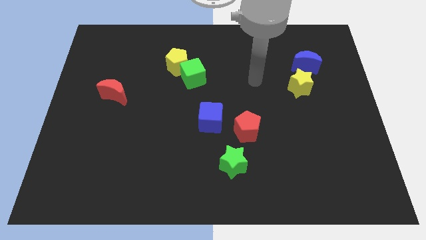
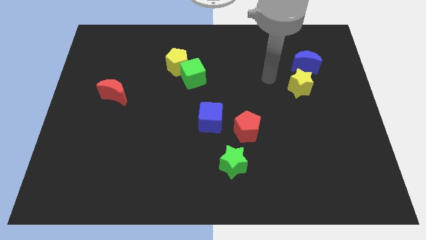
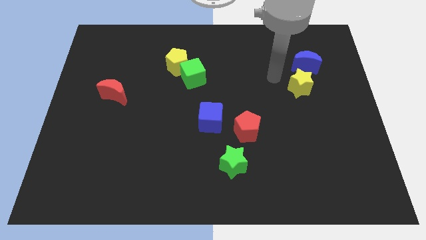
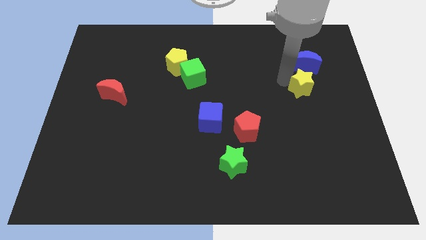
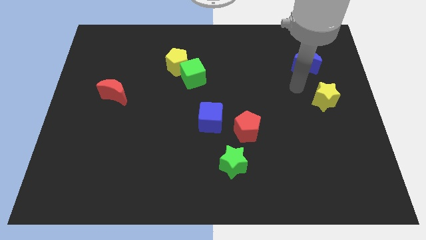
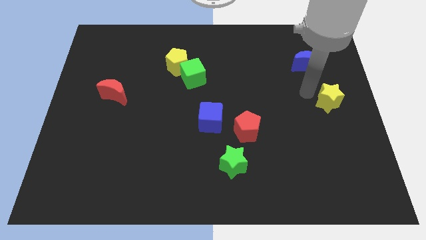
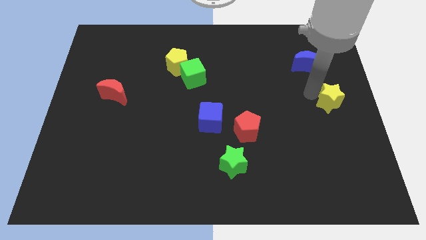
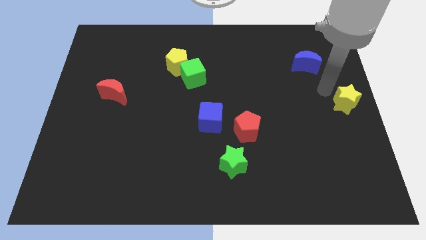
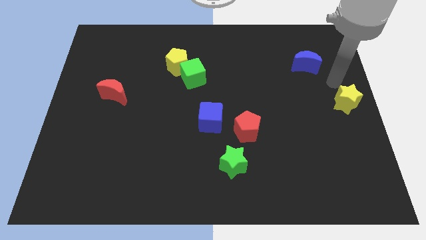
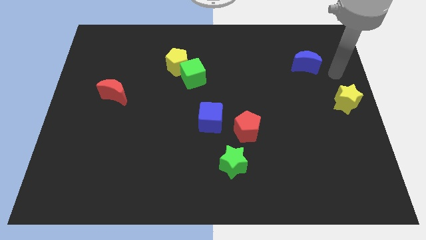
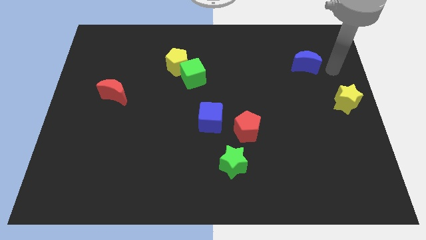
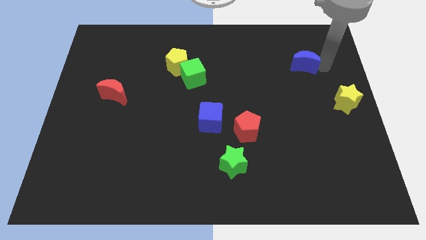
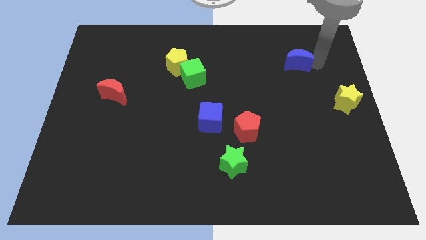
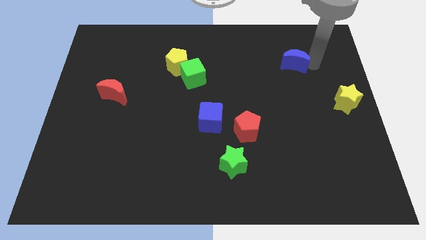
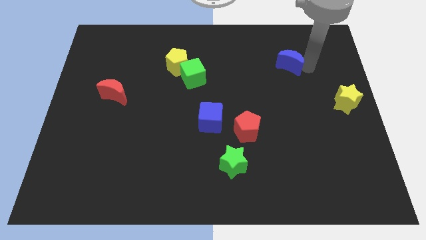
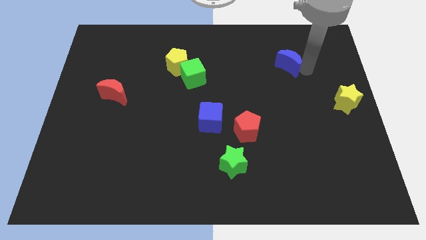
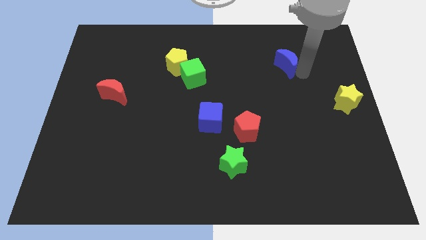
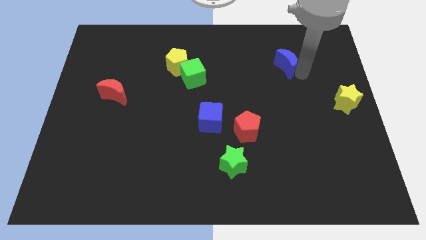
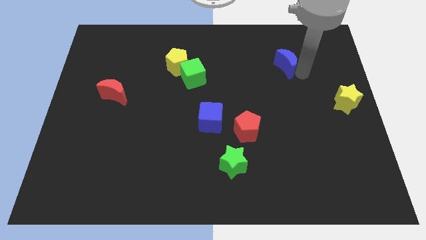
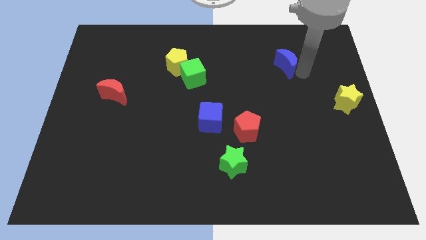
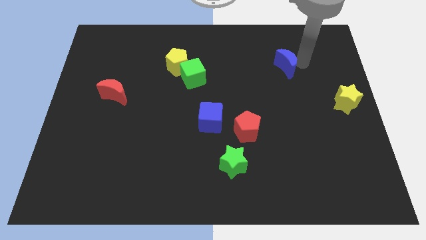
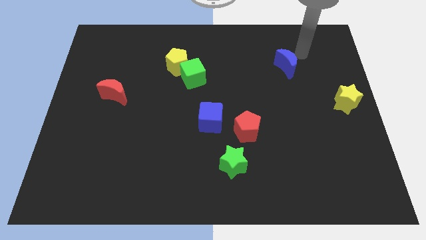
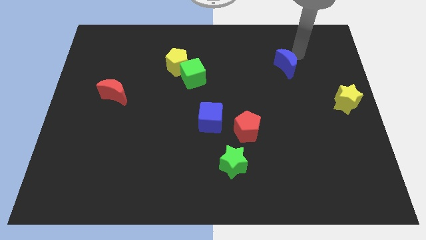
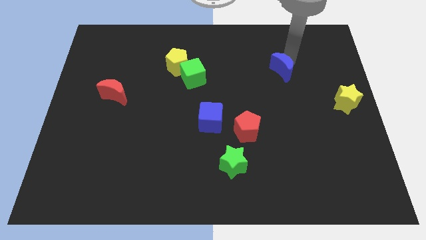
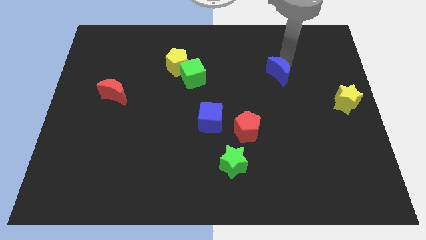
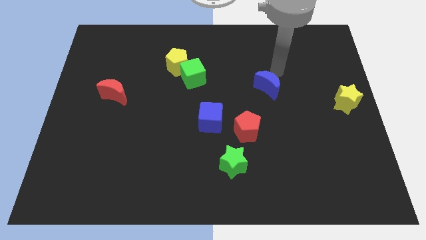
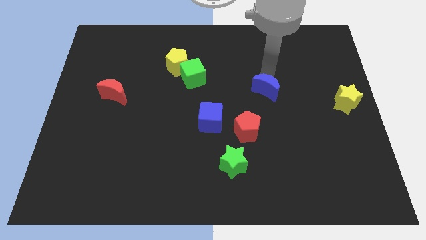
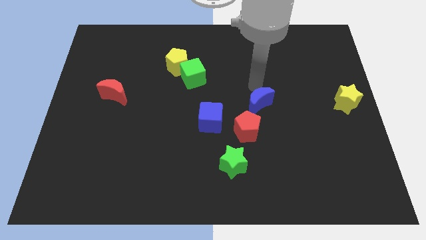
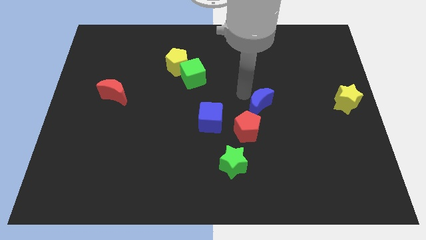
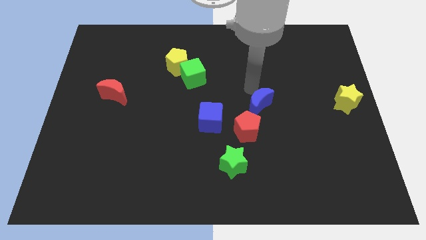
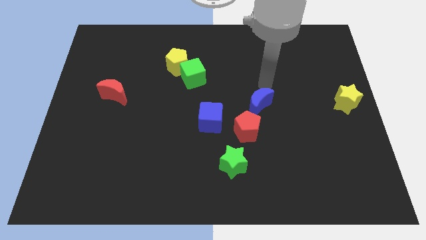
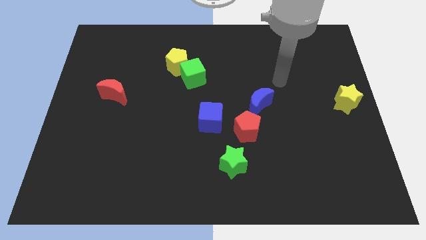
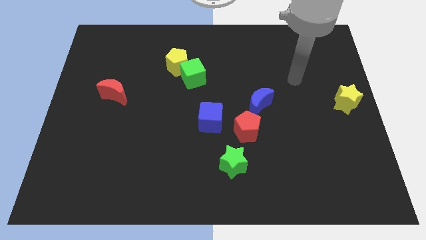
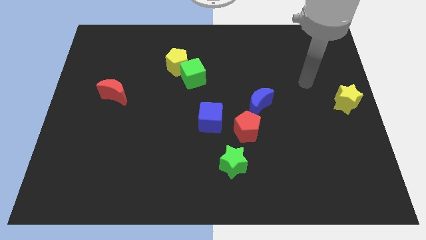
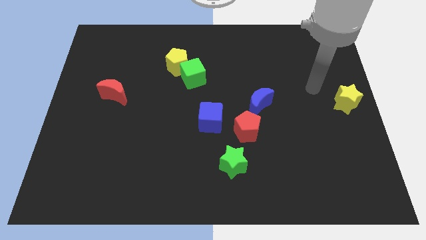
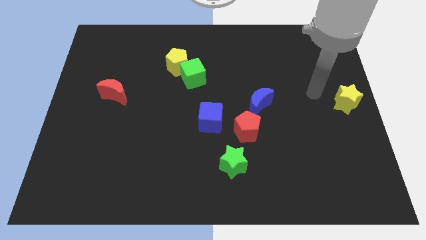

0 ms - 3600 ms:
move the blue crescent right above the red pentagon

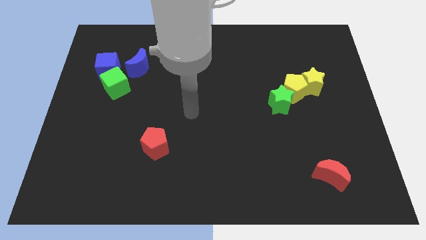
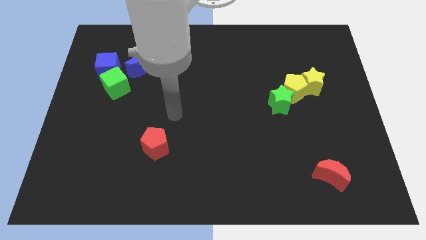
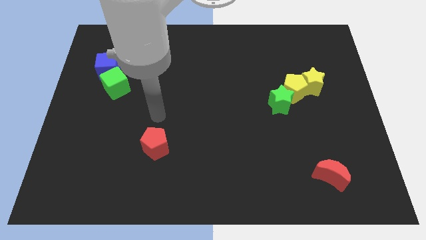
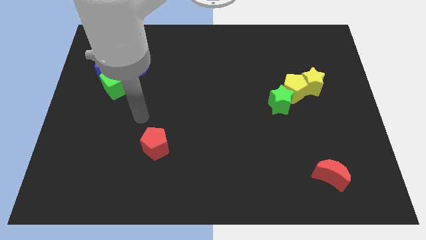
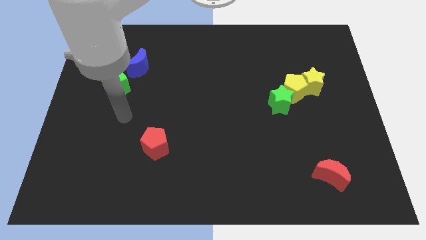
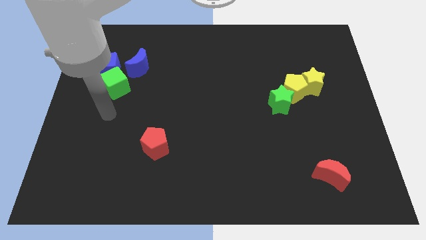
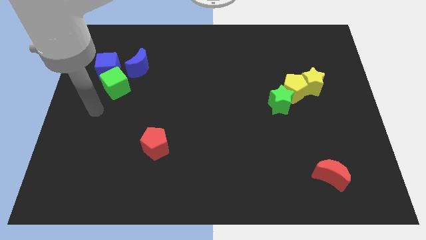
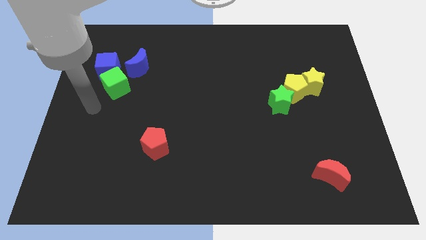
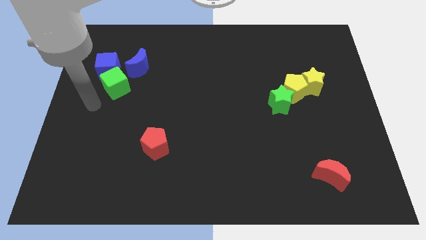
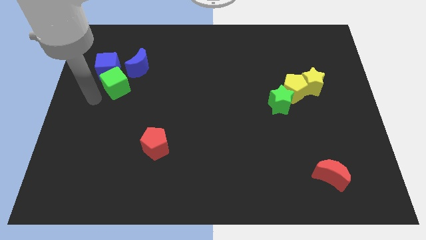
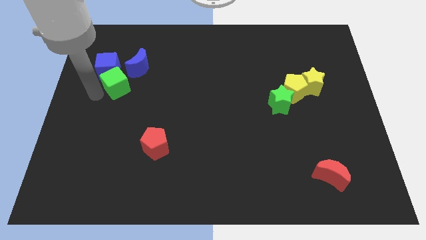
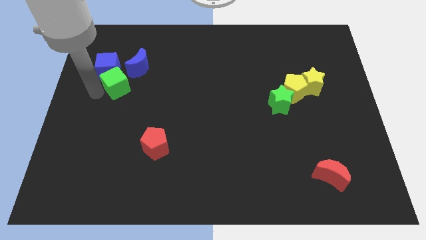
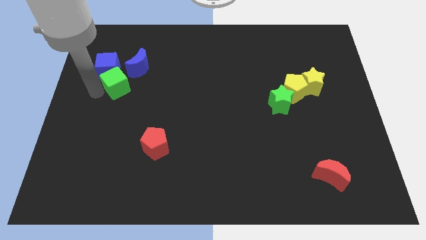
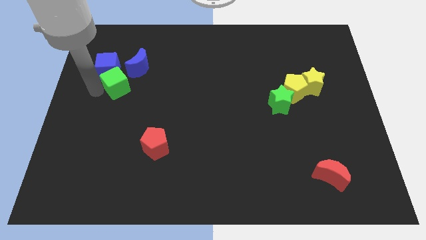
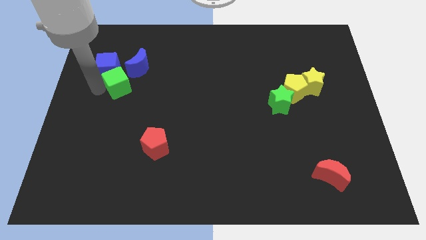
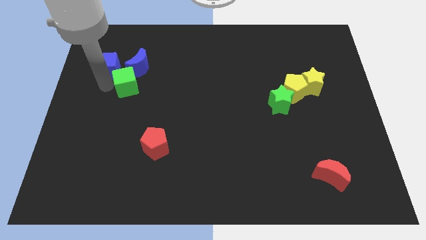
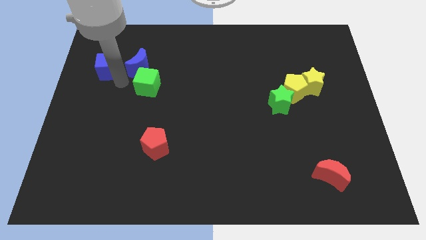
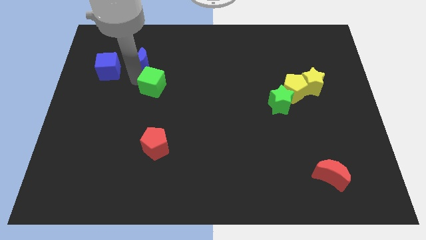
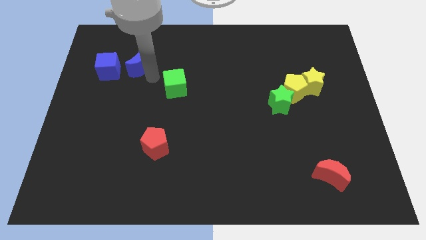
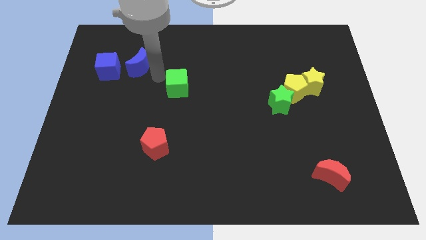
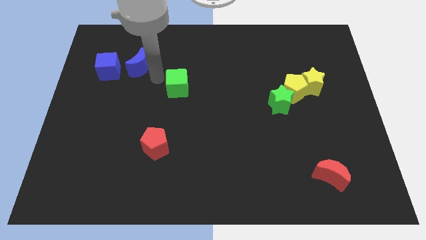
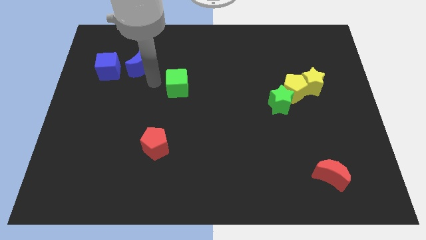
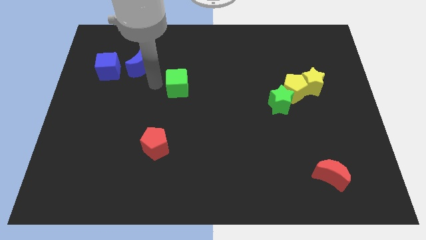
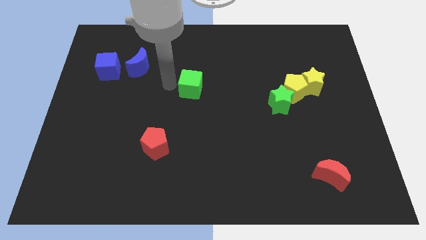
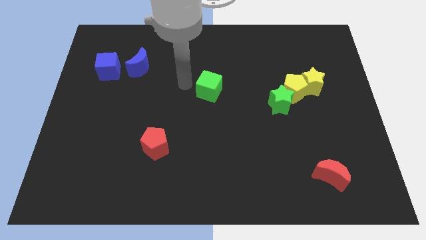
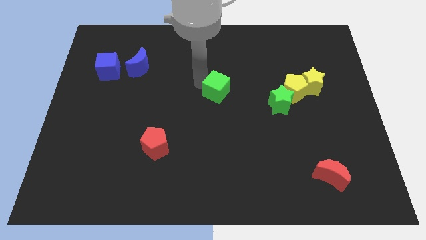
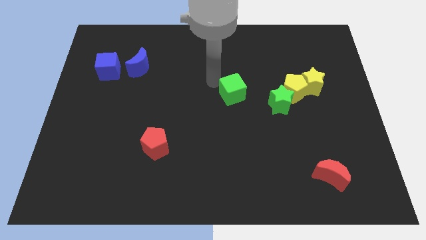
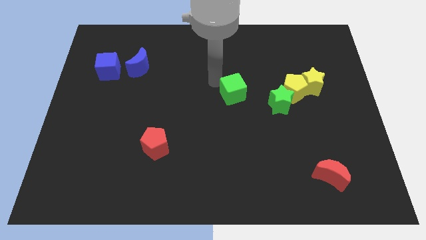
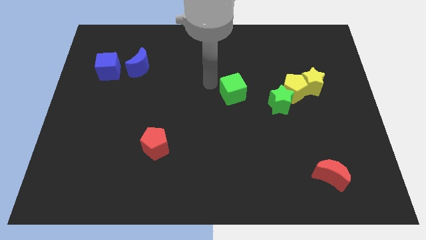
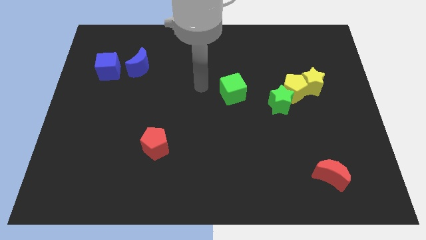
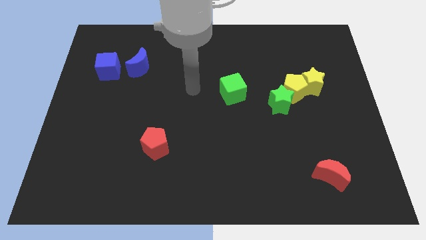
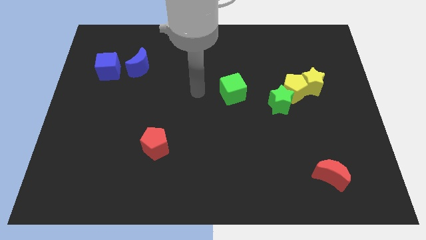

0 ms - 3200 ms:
place the green cube diagonally top right to the red pentagon

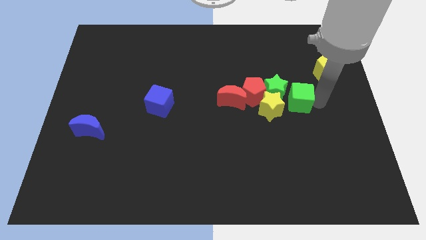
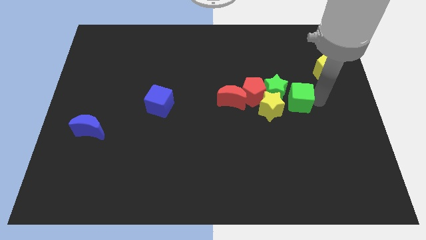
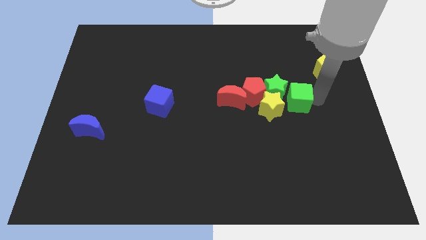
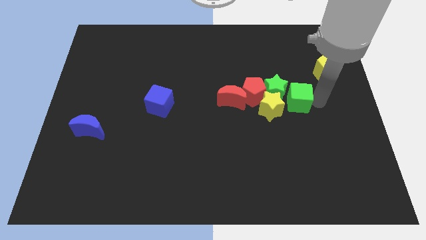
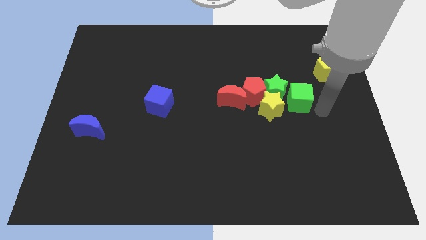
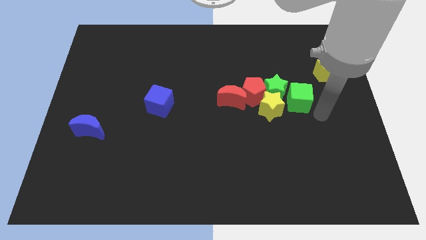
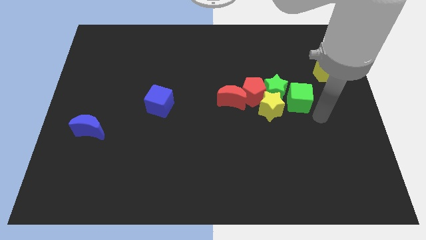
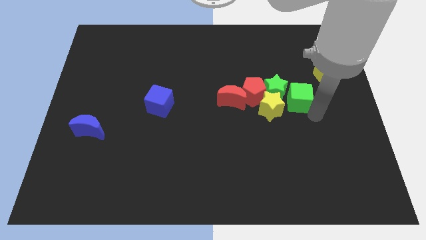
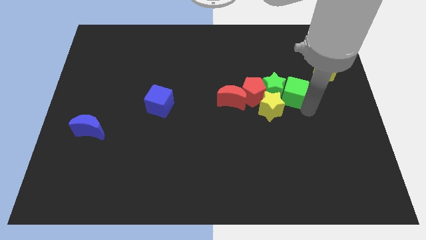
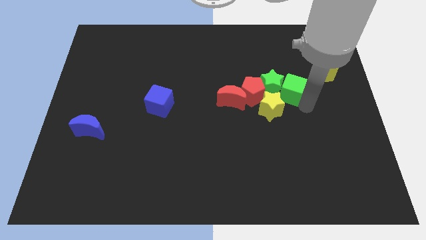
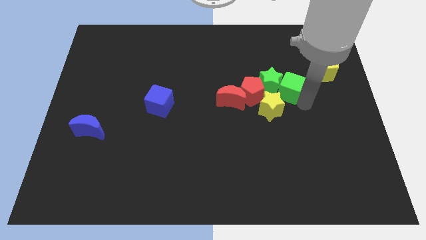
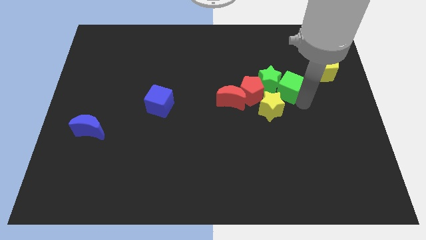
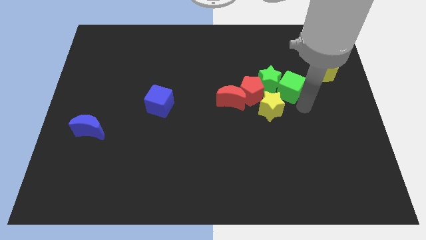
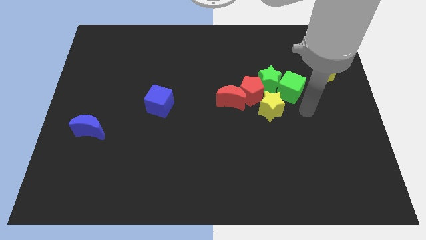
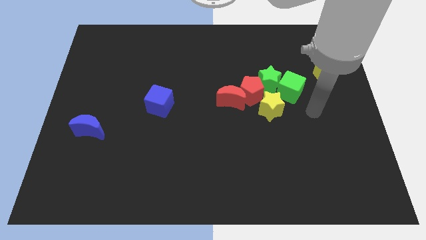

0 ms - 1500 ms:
push the green cube into the green star

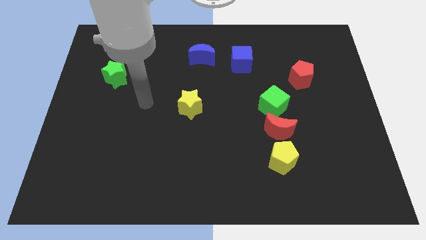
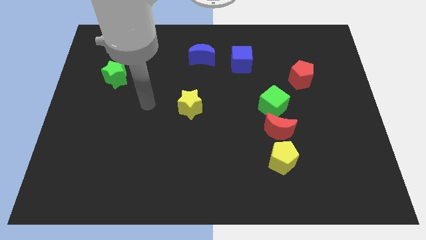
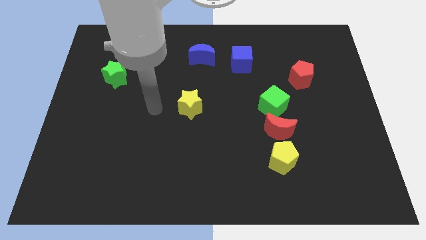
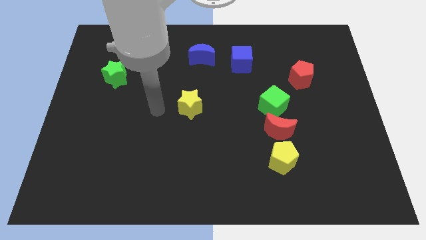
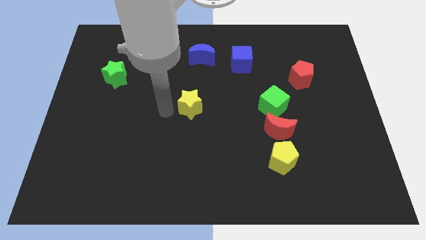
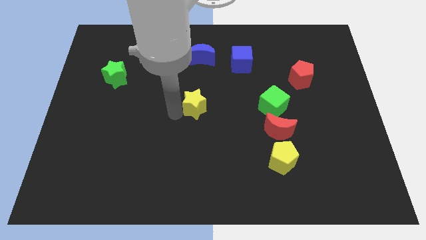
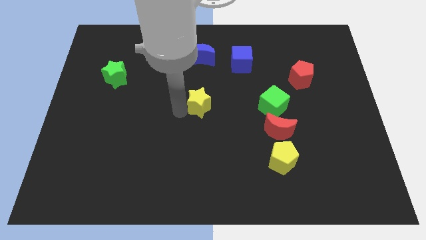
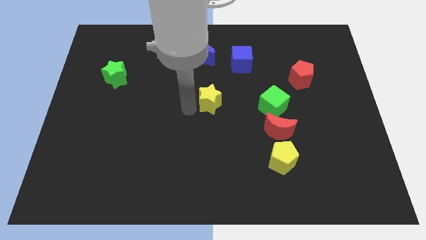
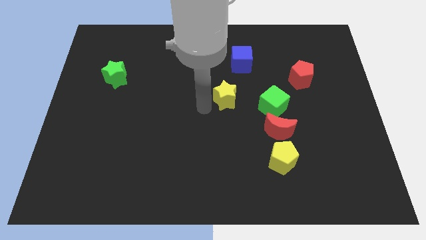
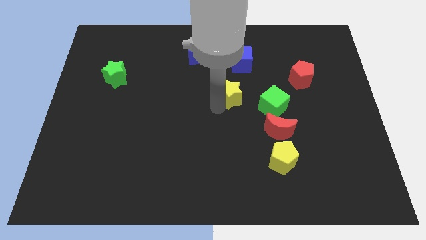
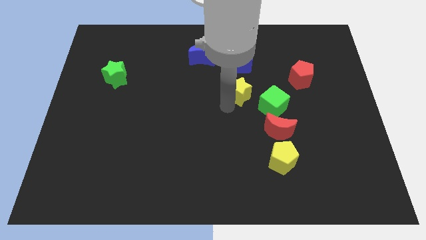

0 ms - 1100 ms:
slide yellow star below blue cube
